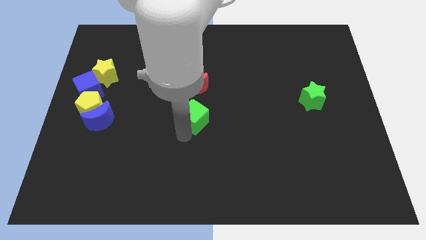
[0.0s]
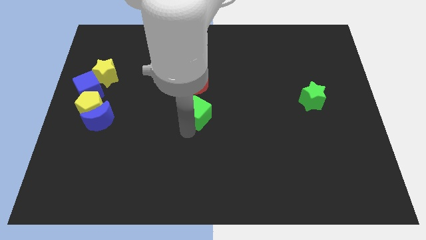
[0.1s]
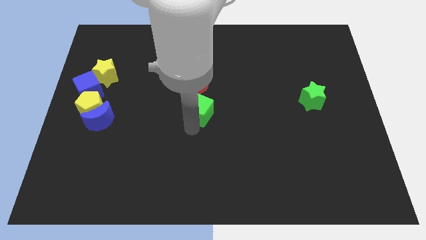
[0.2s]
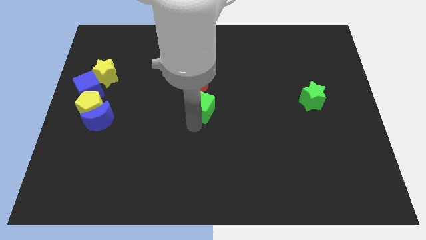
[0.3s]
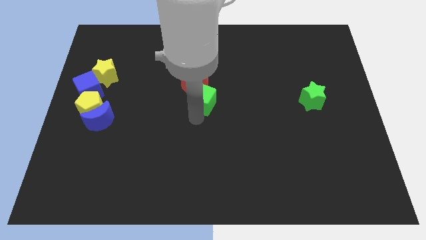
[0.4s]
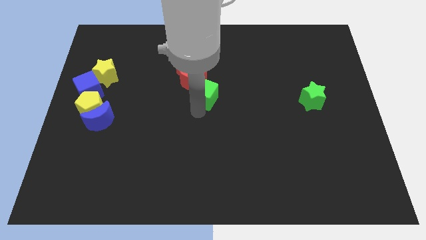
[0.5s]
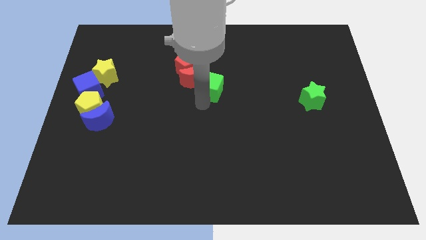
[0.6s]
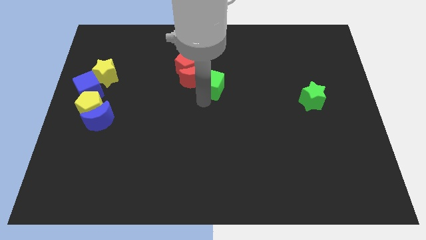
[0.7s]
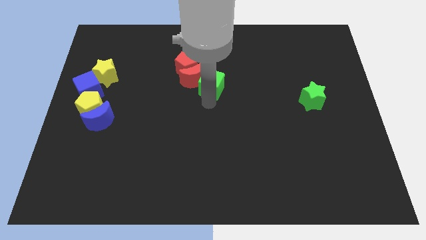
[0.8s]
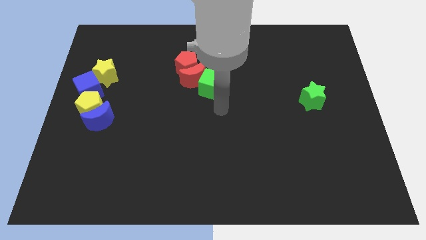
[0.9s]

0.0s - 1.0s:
push the green cube into the red moon

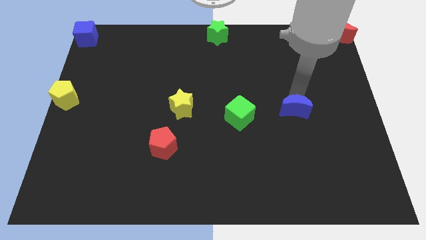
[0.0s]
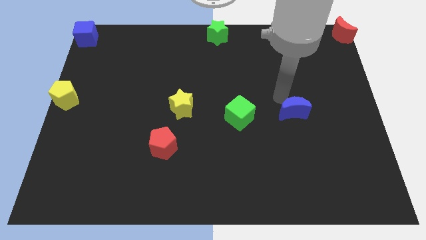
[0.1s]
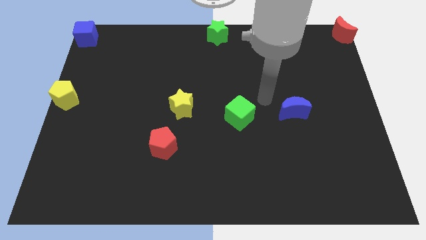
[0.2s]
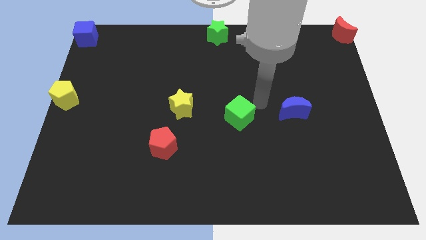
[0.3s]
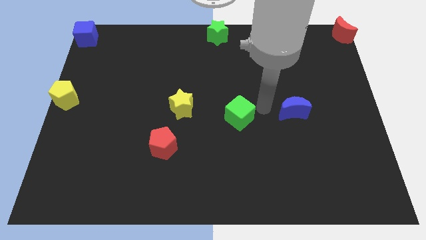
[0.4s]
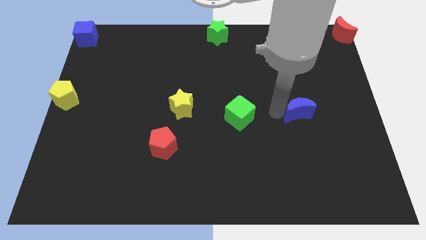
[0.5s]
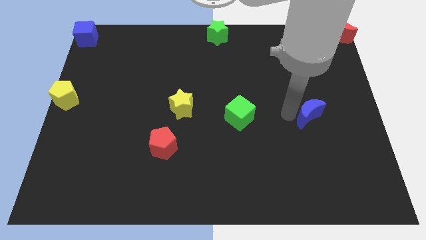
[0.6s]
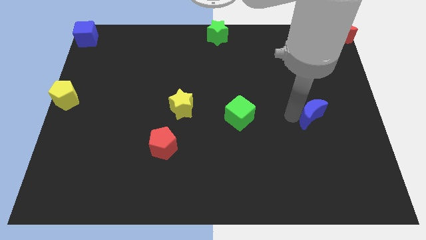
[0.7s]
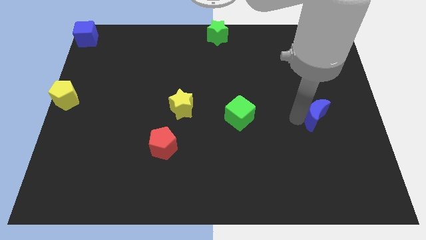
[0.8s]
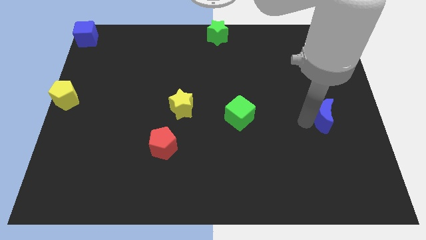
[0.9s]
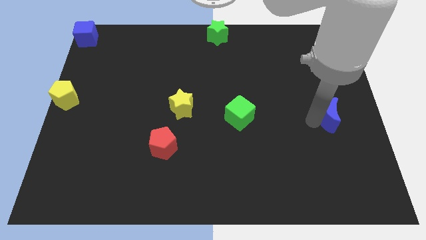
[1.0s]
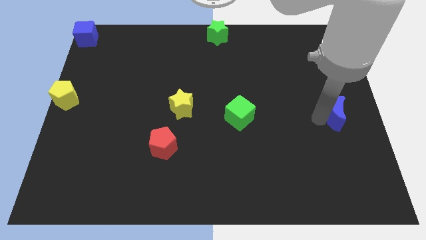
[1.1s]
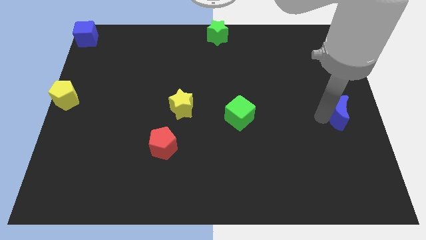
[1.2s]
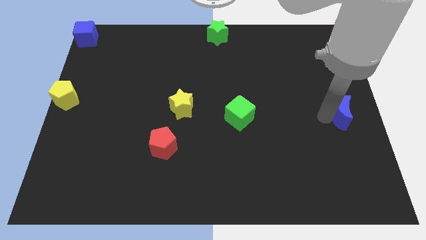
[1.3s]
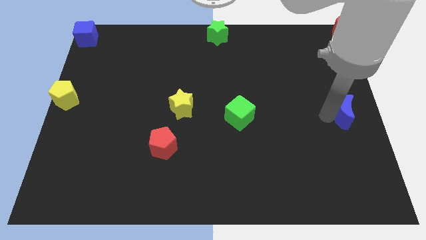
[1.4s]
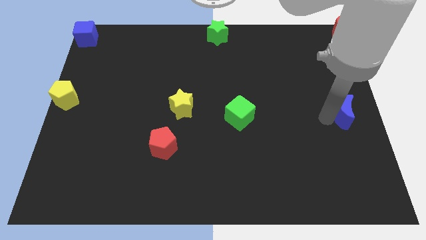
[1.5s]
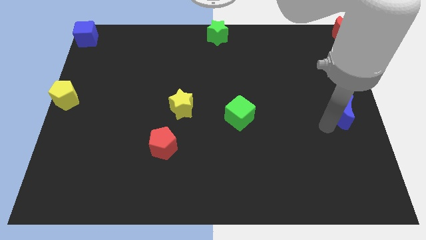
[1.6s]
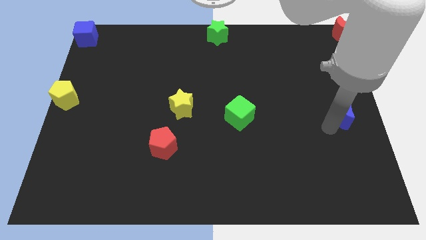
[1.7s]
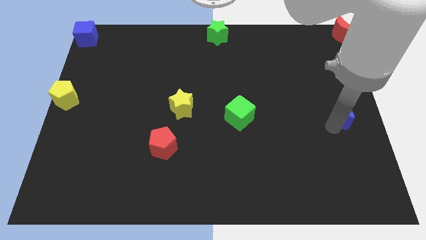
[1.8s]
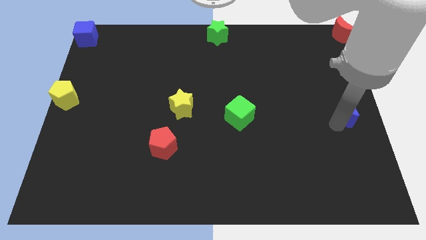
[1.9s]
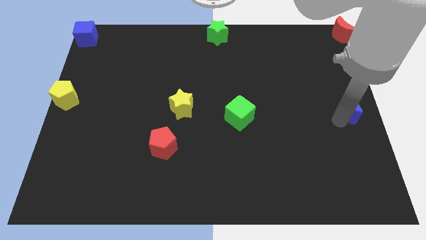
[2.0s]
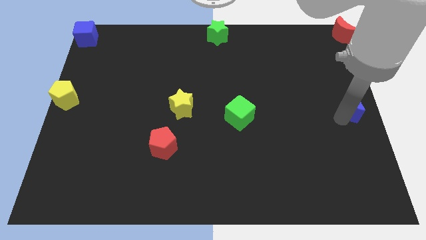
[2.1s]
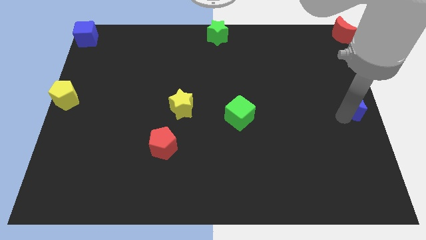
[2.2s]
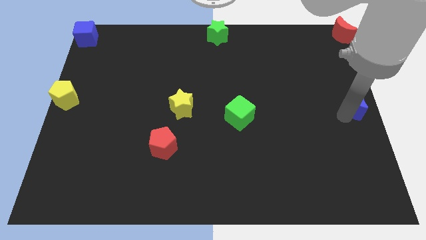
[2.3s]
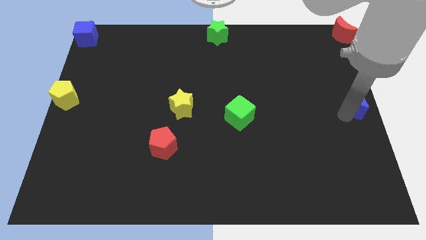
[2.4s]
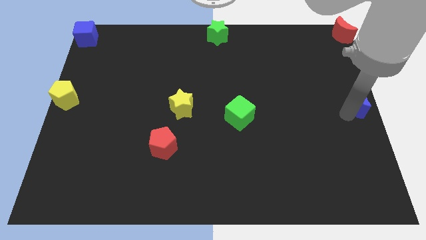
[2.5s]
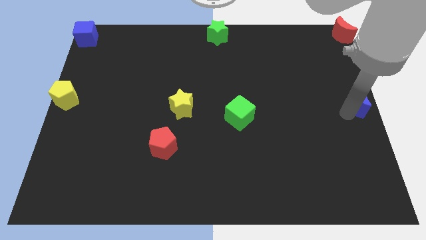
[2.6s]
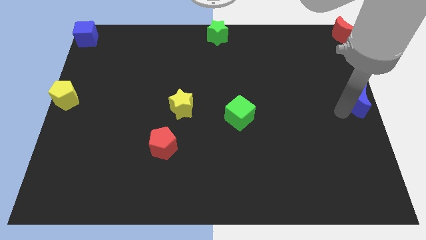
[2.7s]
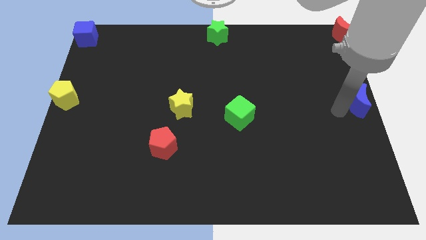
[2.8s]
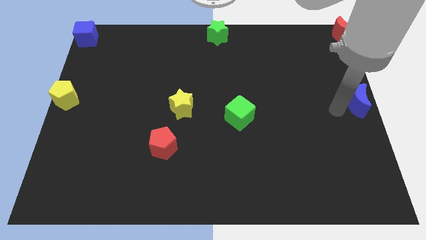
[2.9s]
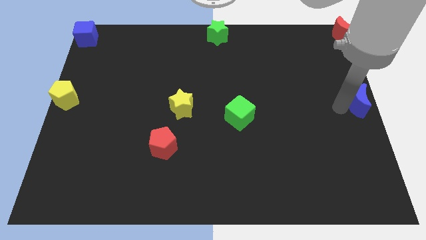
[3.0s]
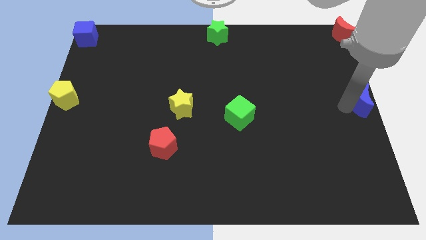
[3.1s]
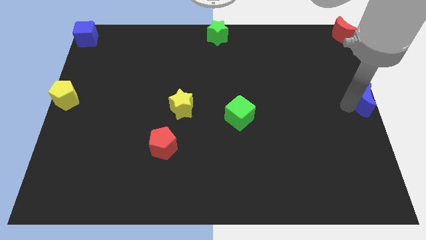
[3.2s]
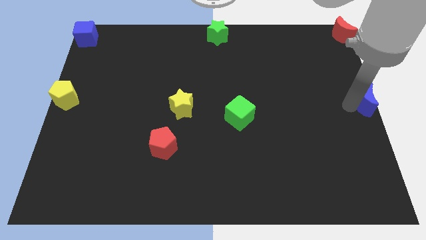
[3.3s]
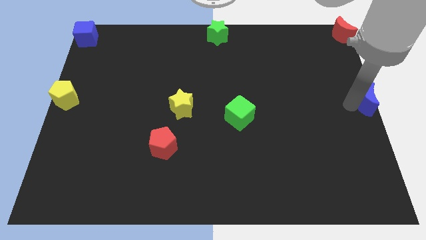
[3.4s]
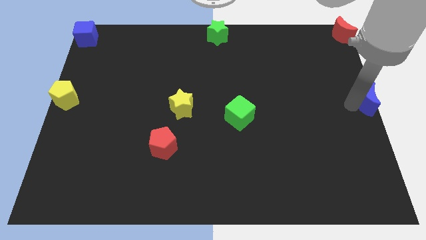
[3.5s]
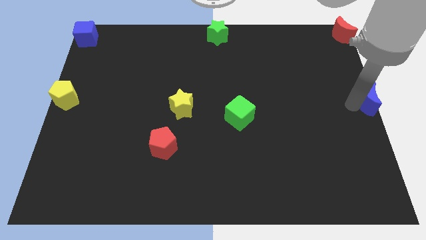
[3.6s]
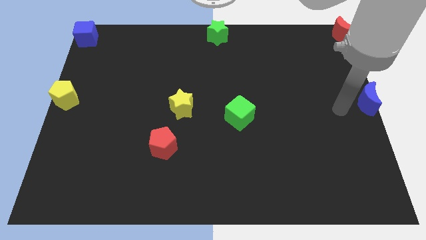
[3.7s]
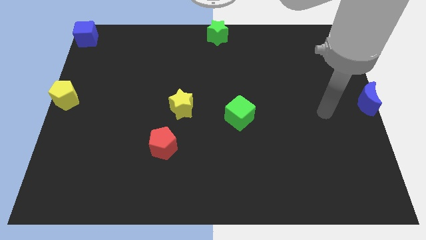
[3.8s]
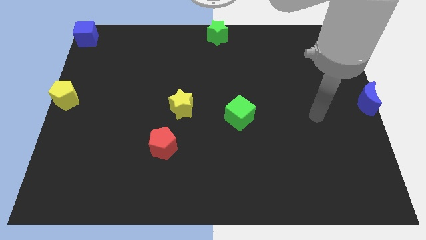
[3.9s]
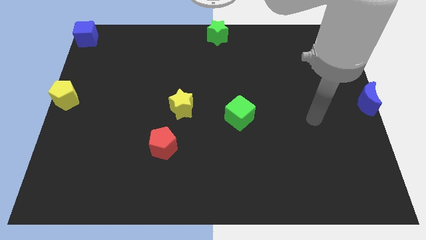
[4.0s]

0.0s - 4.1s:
move the blue moon center right of the board

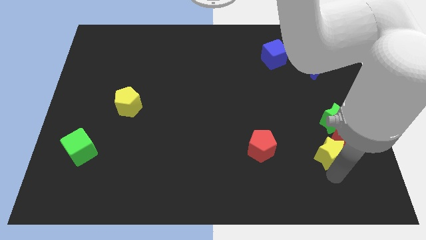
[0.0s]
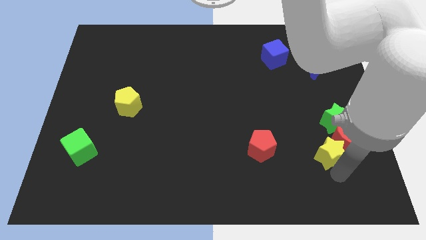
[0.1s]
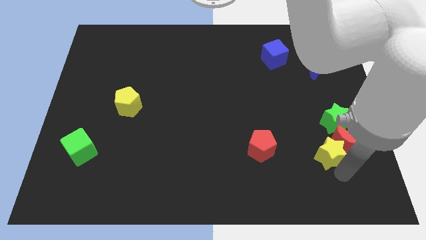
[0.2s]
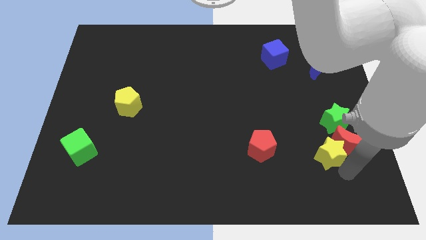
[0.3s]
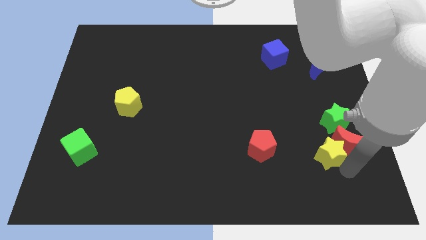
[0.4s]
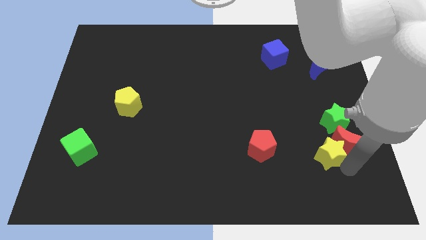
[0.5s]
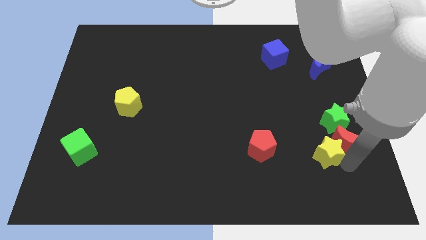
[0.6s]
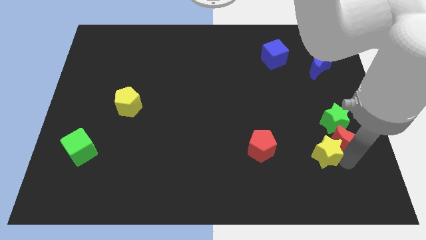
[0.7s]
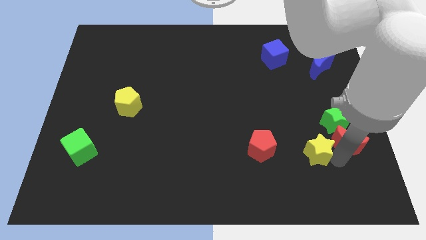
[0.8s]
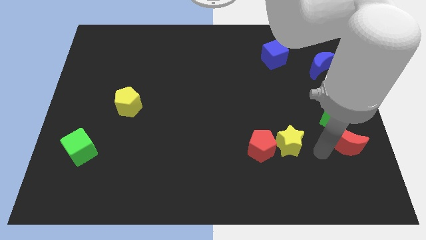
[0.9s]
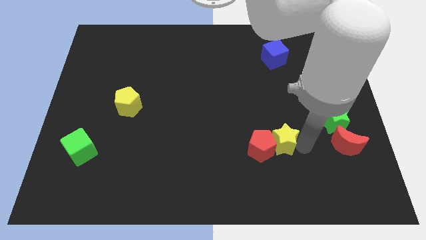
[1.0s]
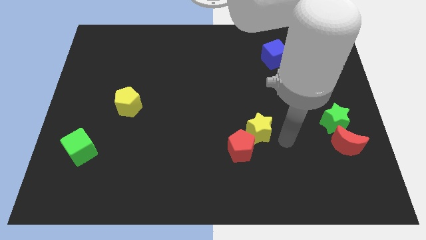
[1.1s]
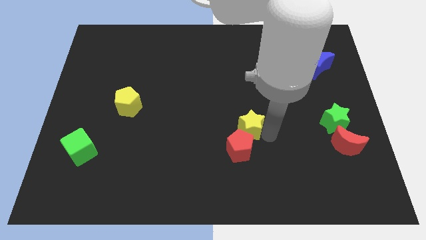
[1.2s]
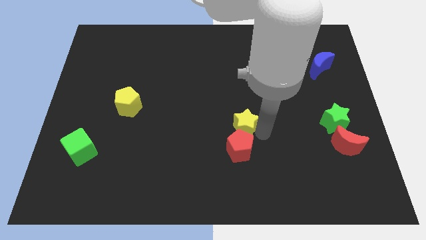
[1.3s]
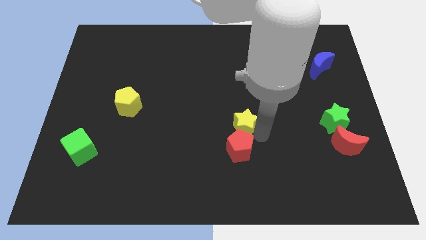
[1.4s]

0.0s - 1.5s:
place yellow star above the red pentagon

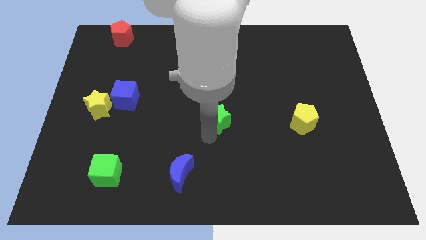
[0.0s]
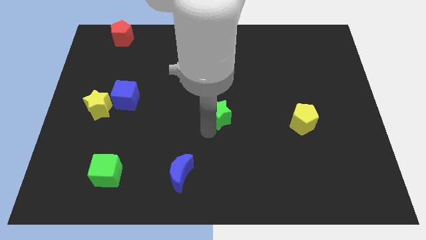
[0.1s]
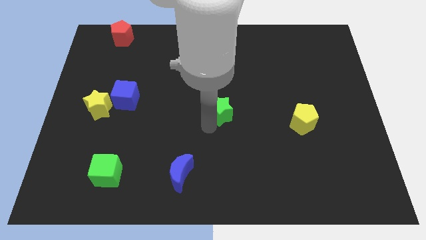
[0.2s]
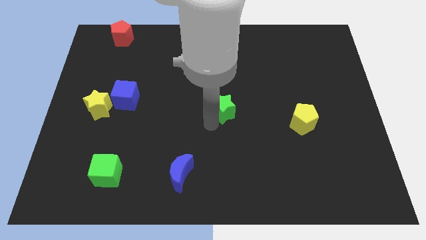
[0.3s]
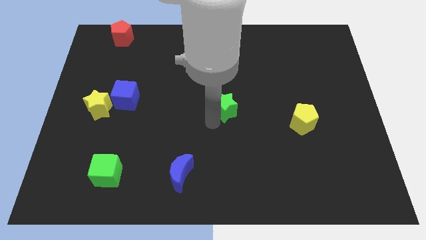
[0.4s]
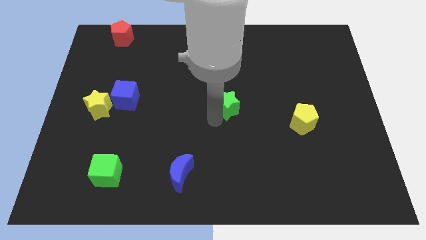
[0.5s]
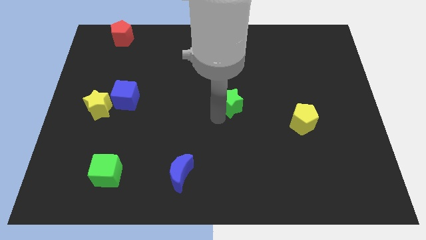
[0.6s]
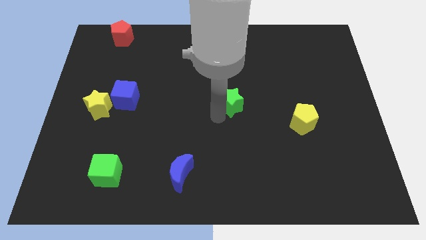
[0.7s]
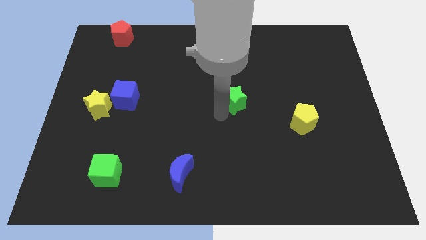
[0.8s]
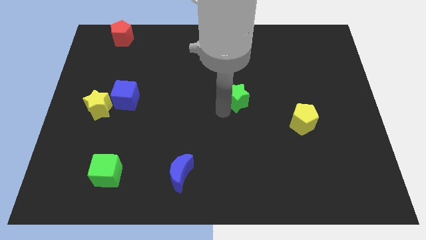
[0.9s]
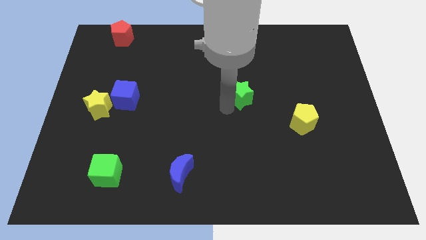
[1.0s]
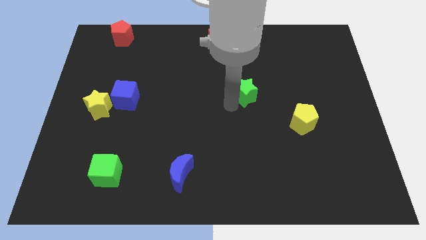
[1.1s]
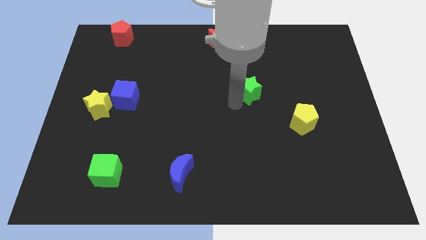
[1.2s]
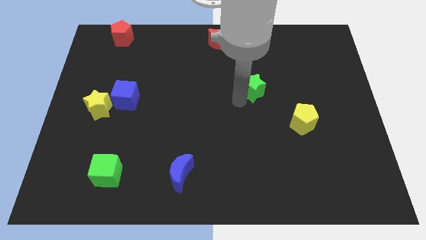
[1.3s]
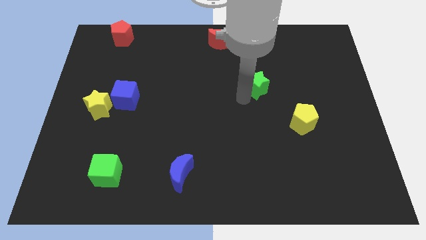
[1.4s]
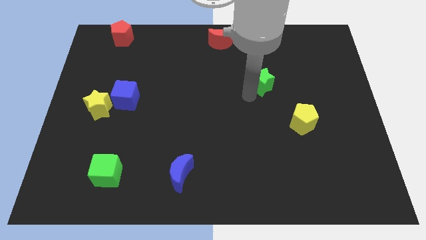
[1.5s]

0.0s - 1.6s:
drag the green star slightly to the right

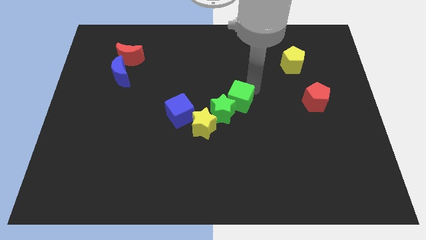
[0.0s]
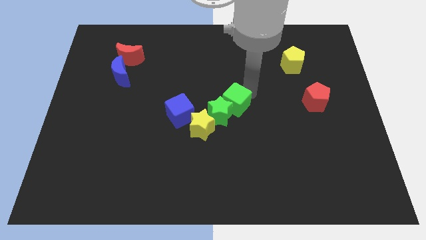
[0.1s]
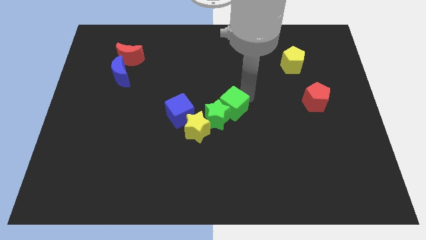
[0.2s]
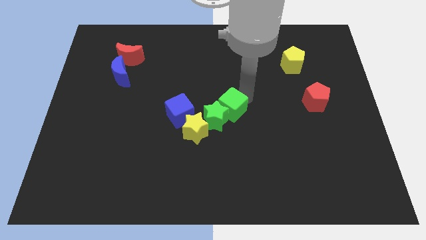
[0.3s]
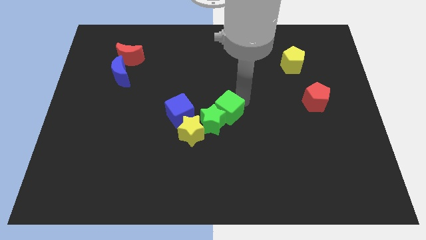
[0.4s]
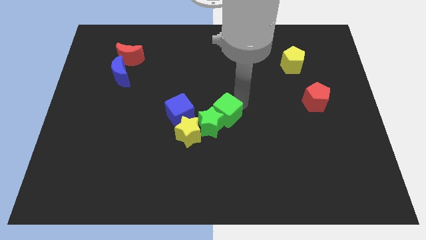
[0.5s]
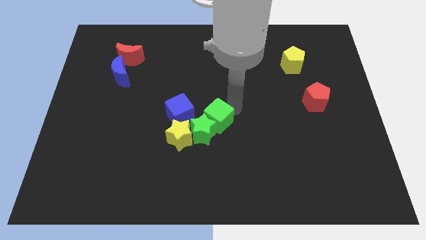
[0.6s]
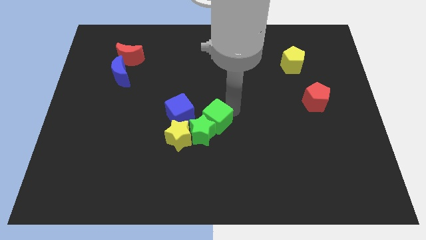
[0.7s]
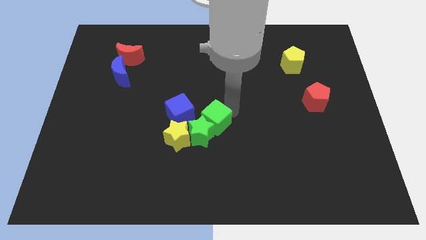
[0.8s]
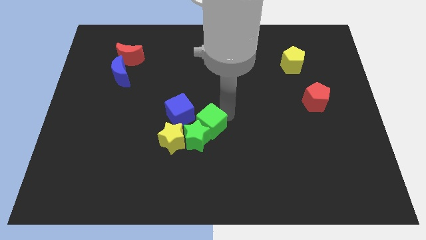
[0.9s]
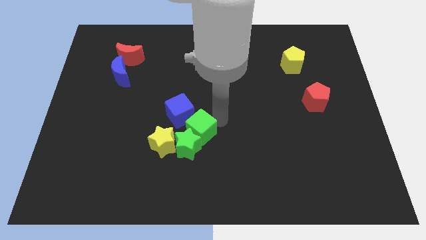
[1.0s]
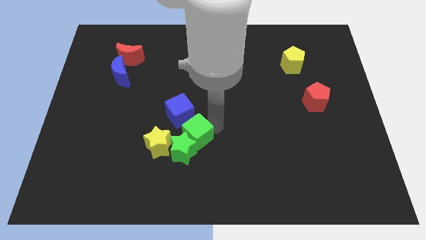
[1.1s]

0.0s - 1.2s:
push green block and yellow star slightly towards left down
